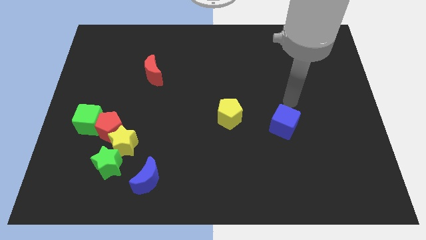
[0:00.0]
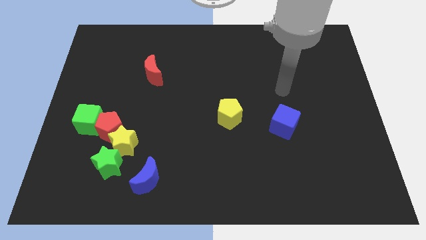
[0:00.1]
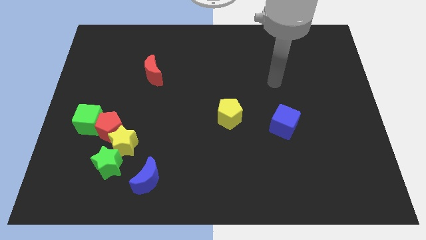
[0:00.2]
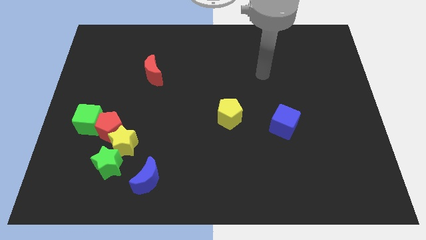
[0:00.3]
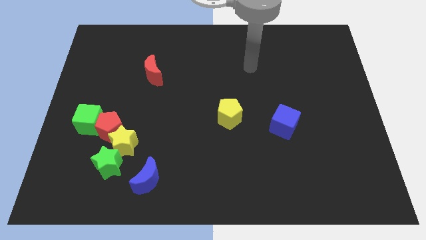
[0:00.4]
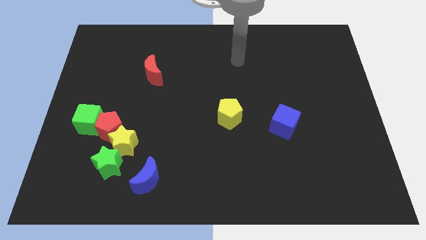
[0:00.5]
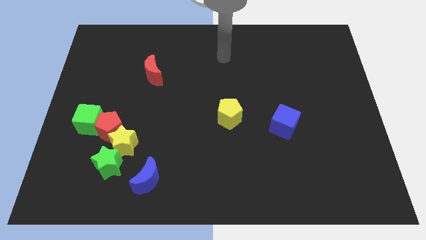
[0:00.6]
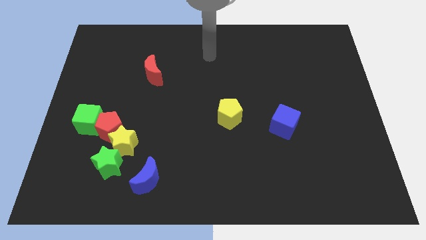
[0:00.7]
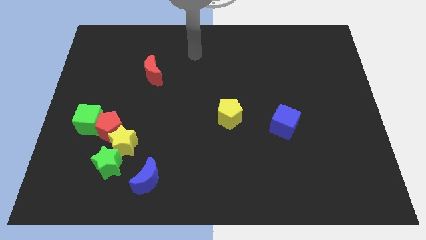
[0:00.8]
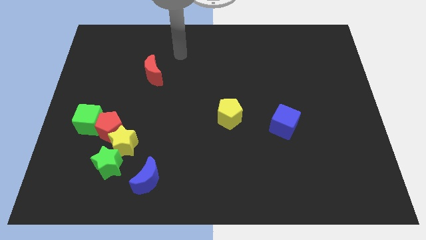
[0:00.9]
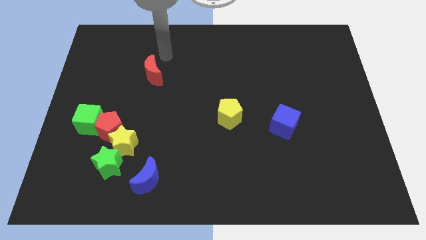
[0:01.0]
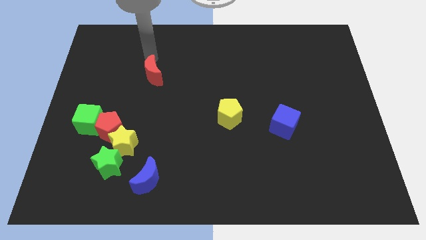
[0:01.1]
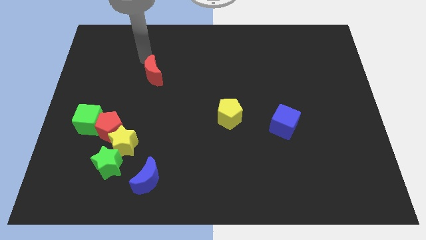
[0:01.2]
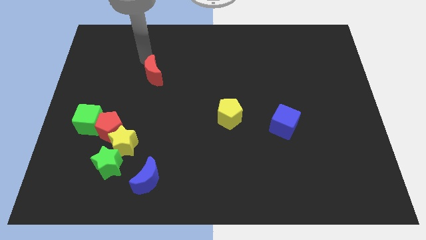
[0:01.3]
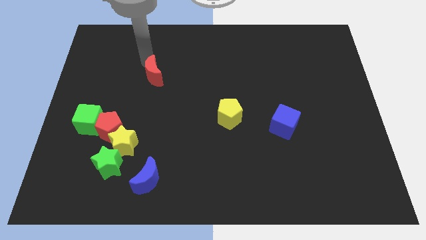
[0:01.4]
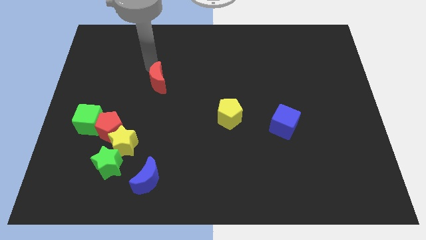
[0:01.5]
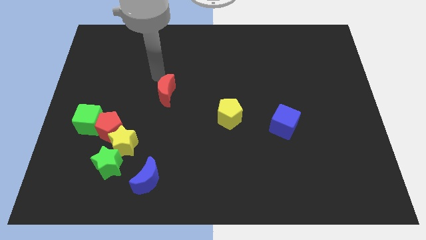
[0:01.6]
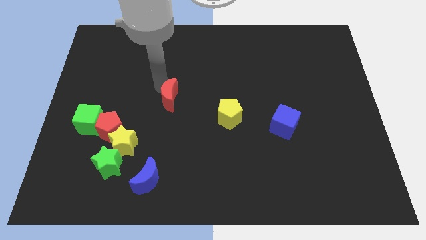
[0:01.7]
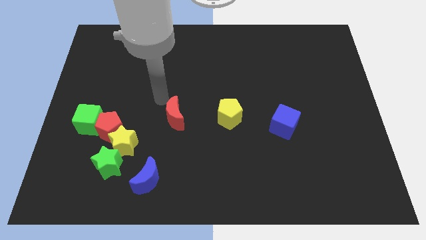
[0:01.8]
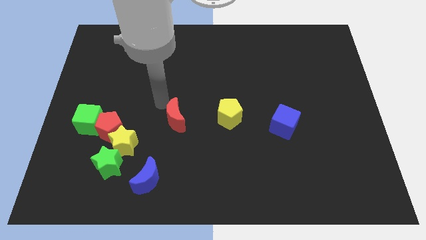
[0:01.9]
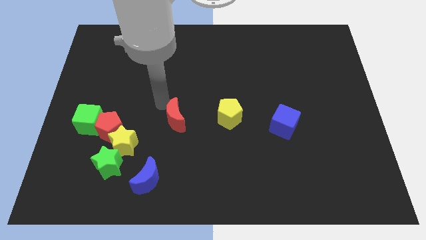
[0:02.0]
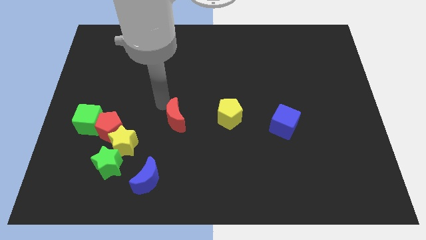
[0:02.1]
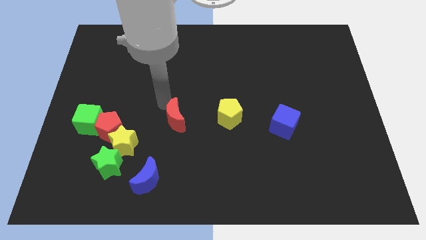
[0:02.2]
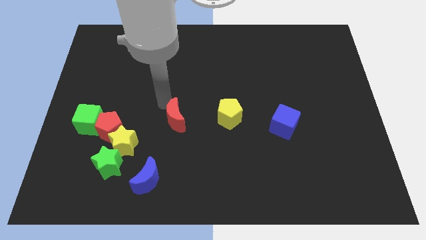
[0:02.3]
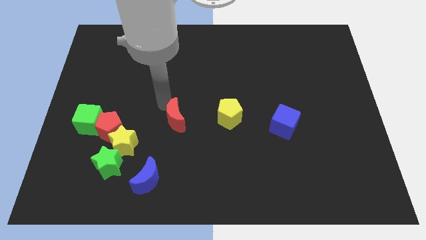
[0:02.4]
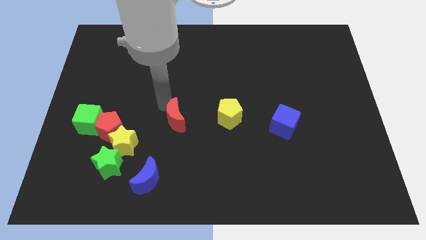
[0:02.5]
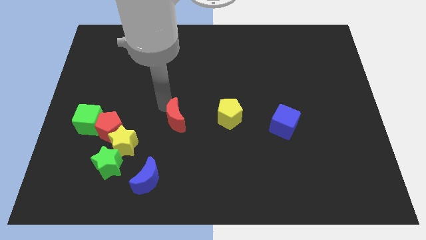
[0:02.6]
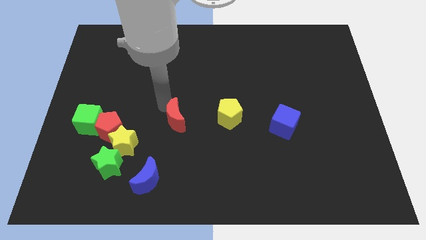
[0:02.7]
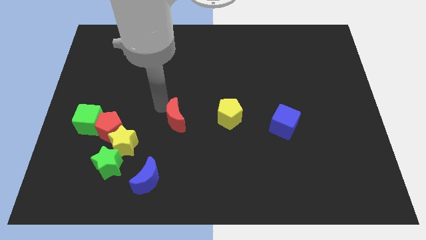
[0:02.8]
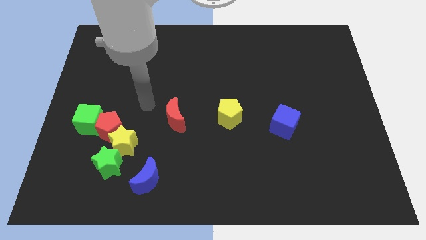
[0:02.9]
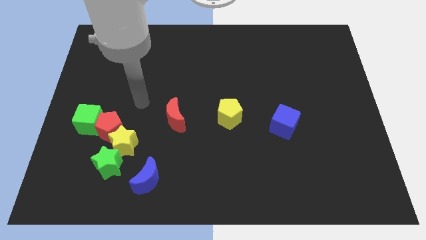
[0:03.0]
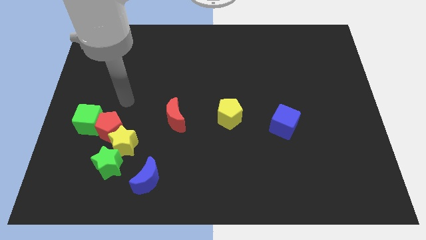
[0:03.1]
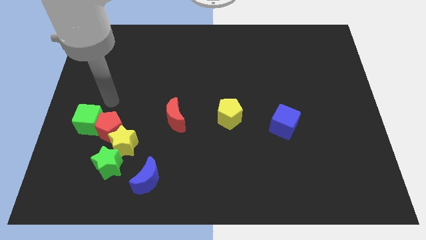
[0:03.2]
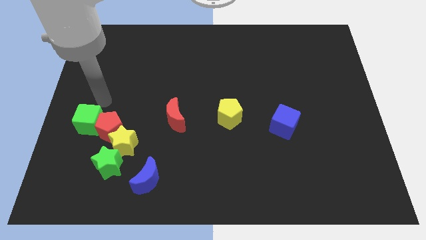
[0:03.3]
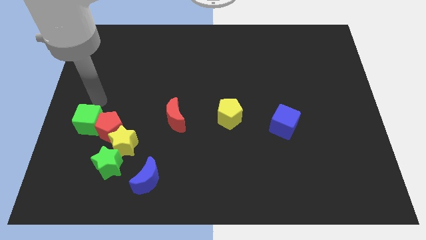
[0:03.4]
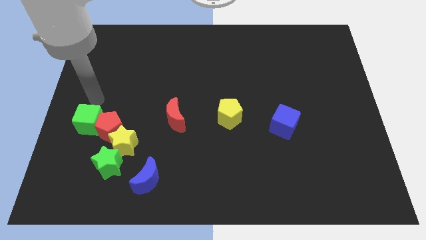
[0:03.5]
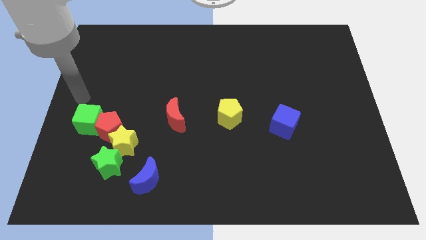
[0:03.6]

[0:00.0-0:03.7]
place the red moon in between the red pentagon and yellow pentagon

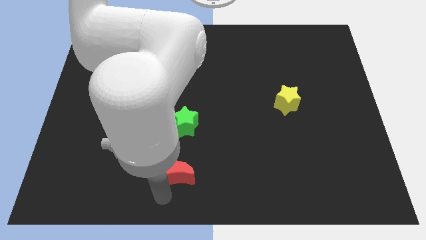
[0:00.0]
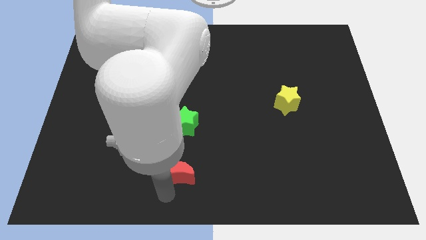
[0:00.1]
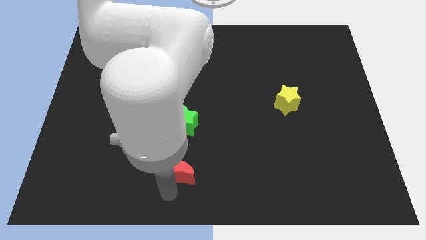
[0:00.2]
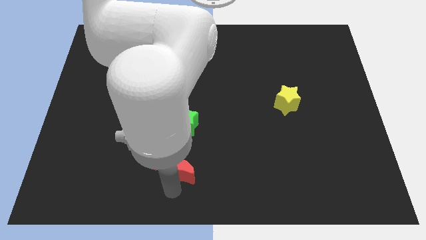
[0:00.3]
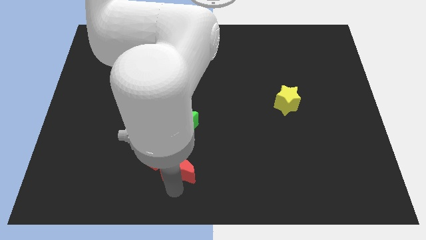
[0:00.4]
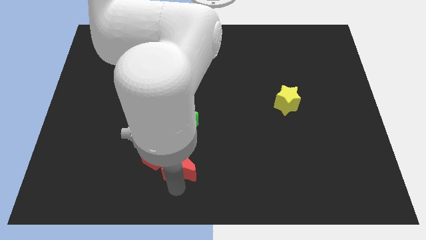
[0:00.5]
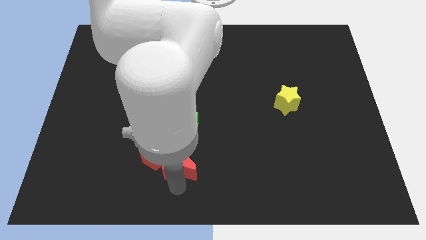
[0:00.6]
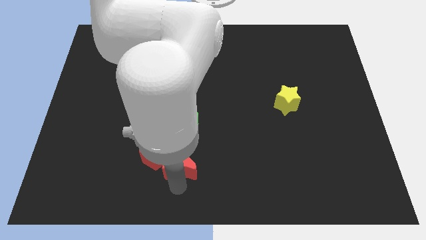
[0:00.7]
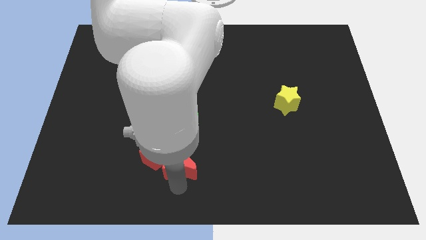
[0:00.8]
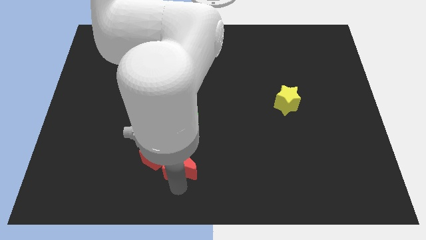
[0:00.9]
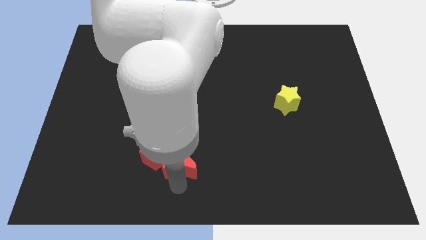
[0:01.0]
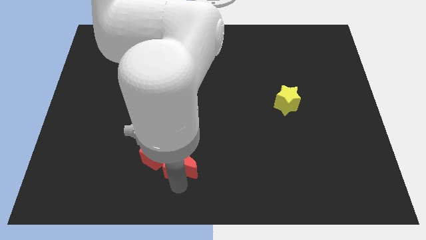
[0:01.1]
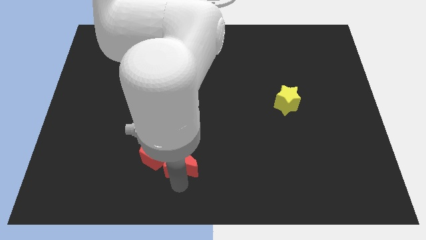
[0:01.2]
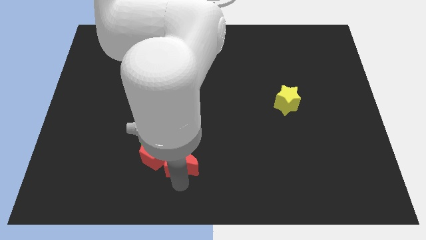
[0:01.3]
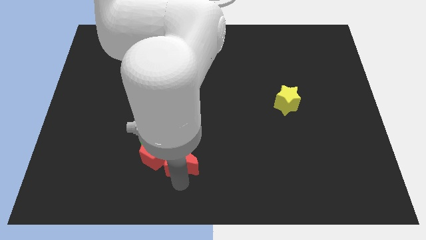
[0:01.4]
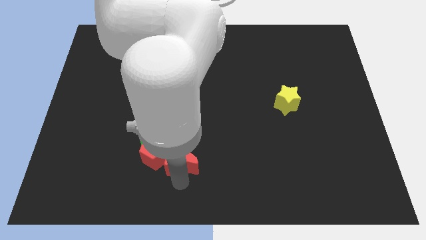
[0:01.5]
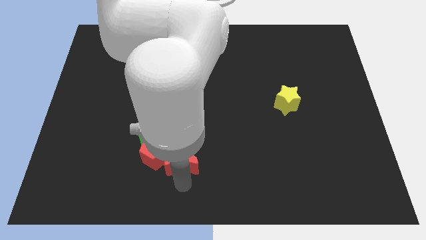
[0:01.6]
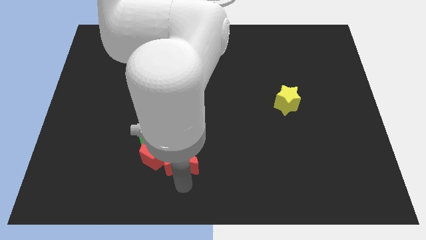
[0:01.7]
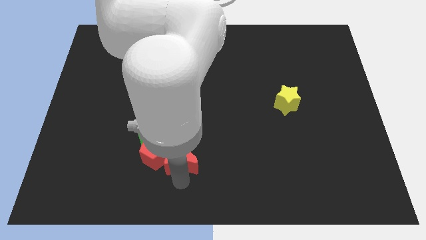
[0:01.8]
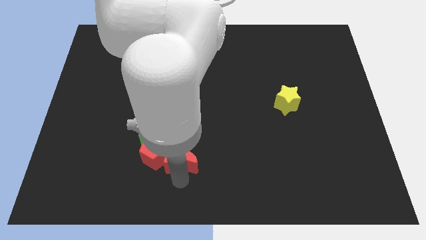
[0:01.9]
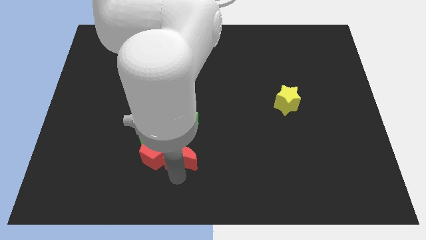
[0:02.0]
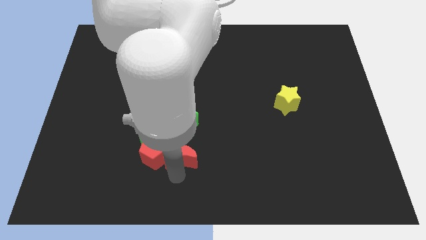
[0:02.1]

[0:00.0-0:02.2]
move red moon right beside red pentagon

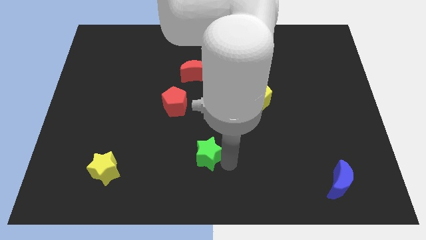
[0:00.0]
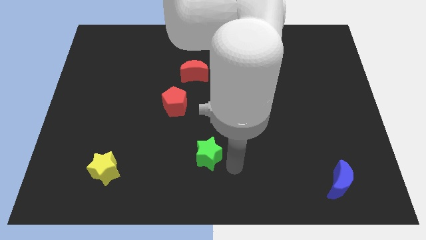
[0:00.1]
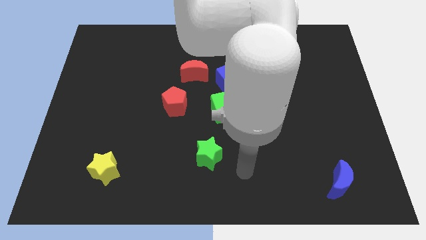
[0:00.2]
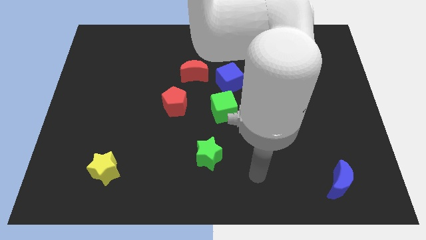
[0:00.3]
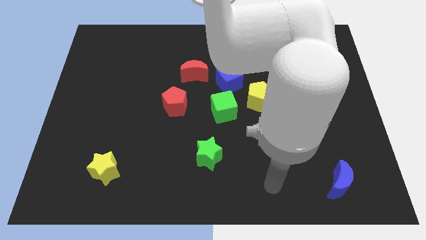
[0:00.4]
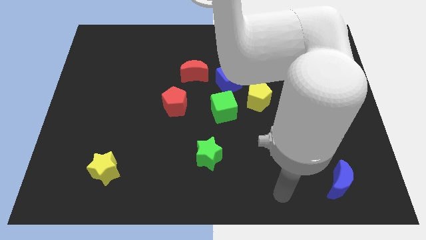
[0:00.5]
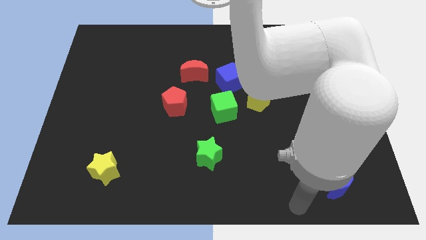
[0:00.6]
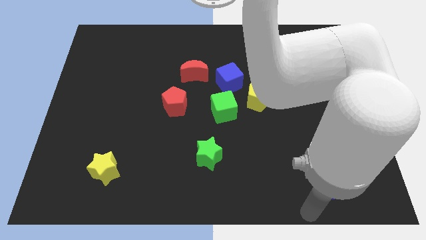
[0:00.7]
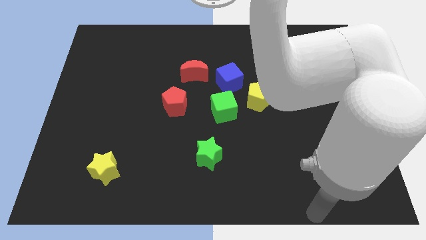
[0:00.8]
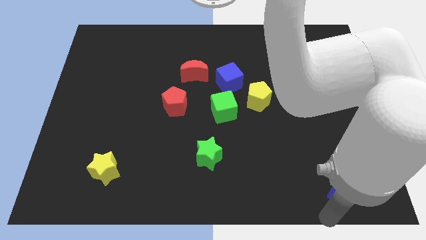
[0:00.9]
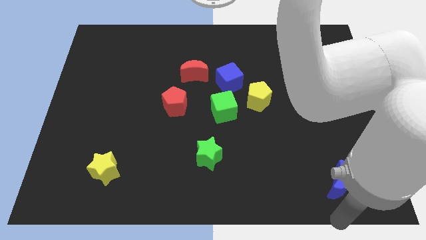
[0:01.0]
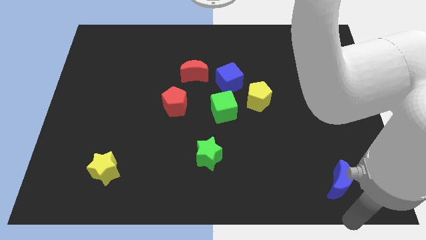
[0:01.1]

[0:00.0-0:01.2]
point your arm at the bottom of the blue crescent

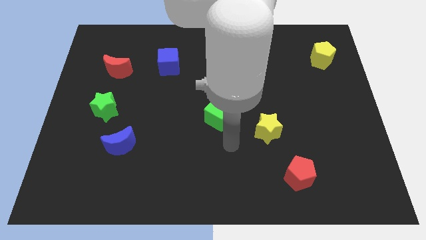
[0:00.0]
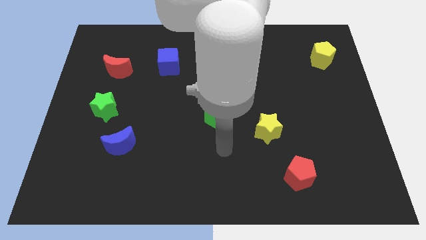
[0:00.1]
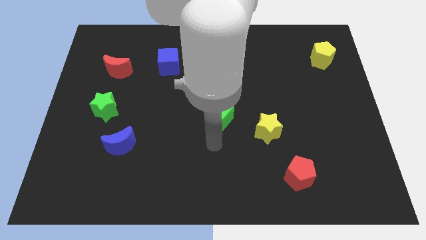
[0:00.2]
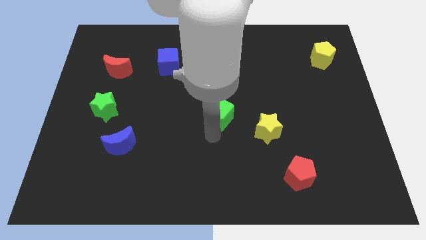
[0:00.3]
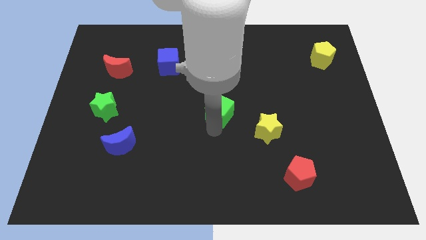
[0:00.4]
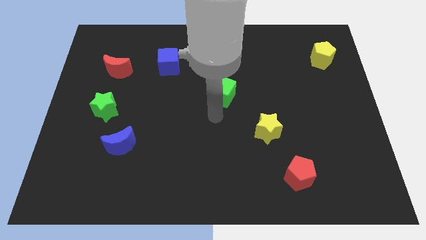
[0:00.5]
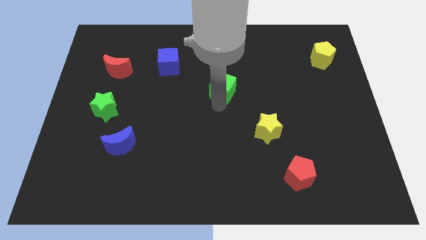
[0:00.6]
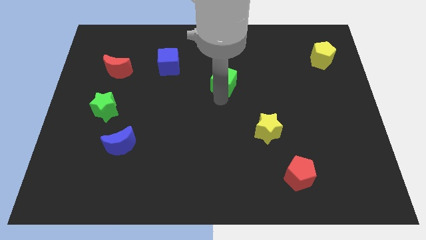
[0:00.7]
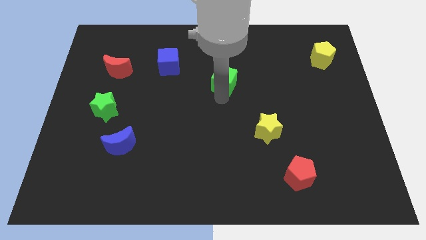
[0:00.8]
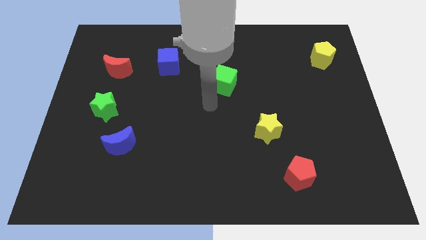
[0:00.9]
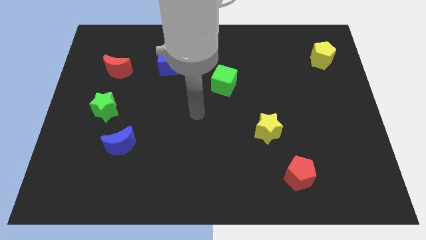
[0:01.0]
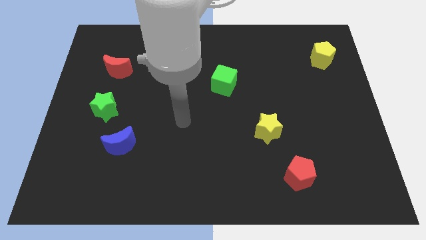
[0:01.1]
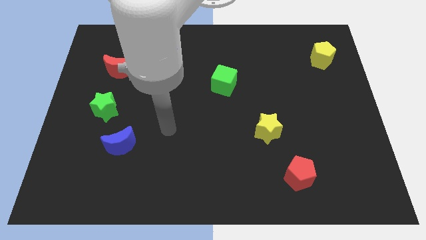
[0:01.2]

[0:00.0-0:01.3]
move the green cube slightly towards top of the board

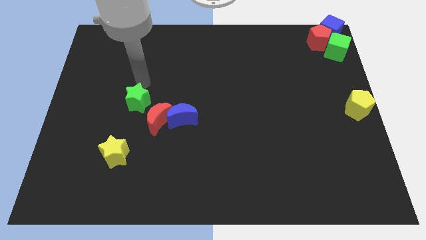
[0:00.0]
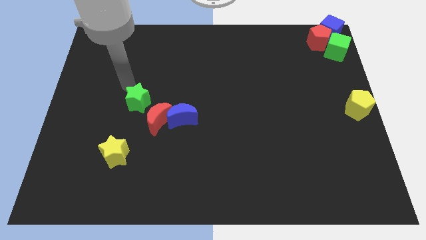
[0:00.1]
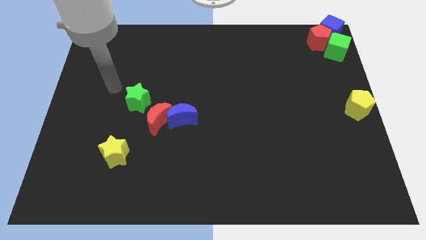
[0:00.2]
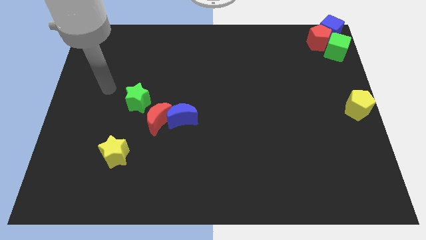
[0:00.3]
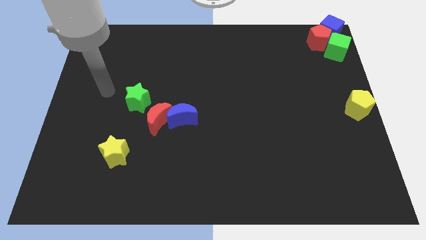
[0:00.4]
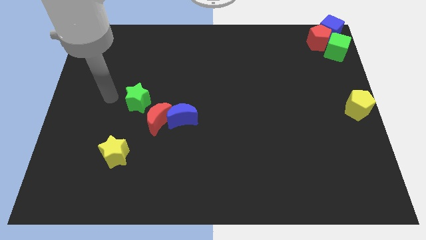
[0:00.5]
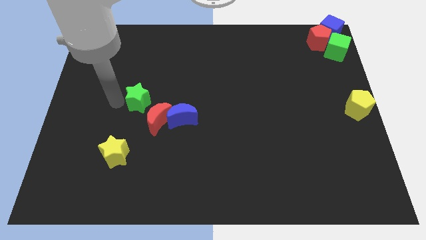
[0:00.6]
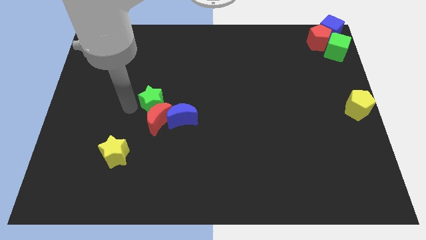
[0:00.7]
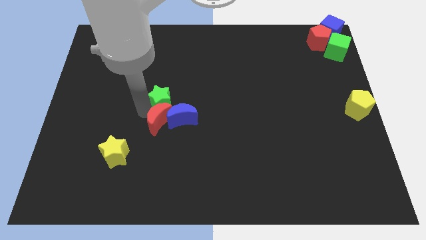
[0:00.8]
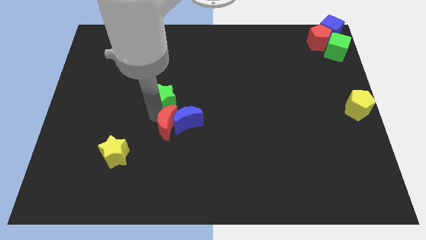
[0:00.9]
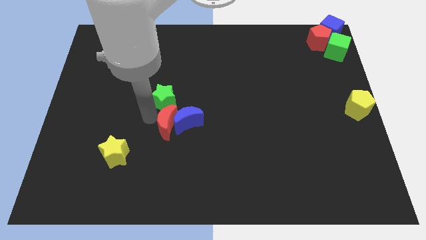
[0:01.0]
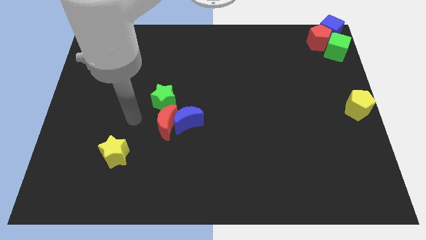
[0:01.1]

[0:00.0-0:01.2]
slightly push the green star towards the top left side of the red crescent
